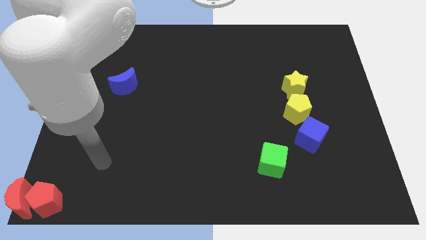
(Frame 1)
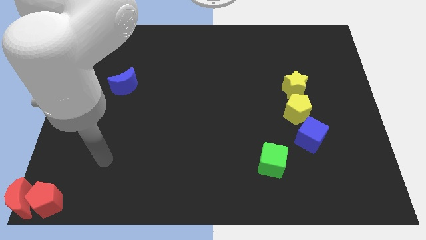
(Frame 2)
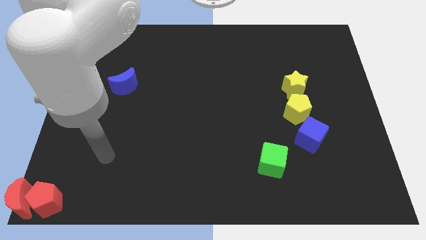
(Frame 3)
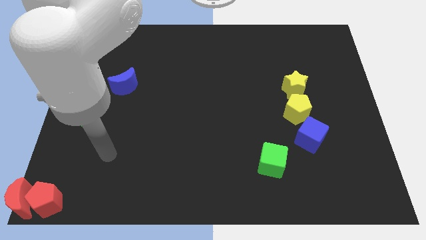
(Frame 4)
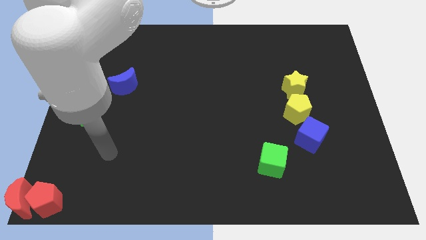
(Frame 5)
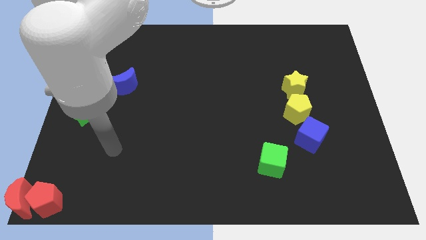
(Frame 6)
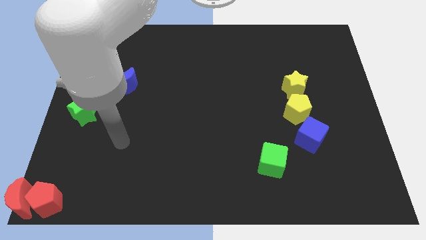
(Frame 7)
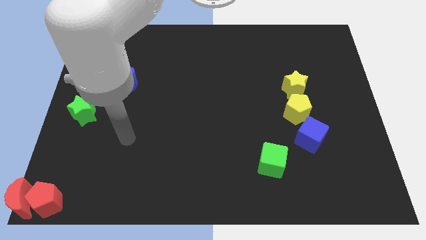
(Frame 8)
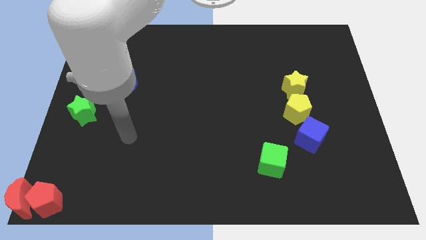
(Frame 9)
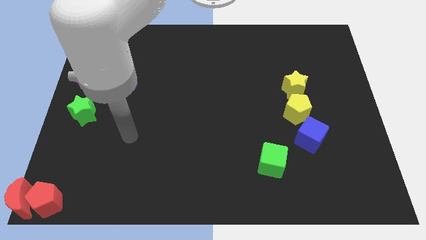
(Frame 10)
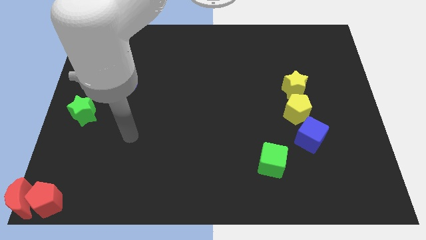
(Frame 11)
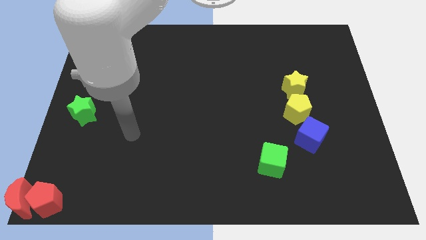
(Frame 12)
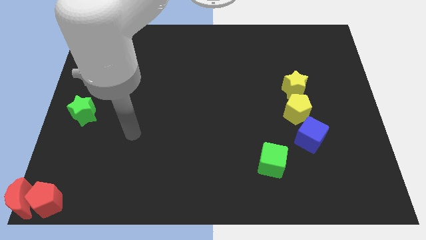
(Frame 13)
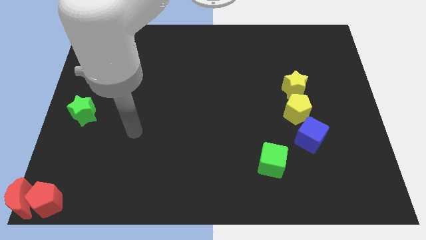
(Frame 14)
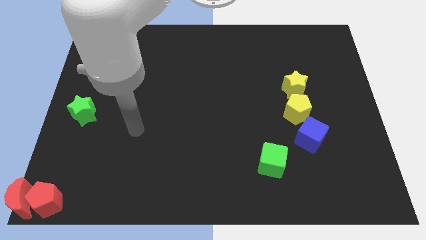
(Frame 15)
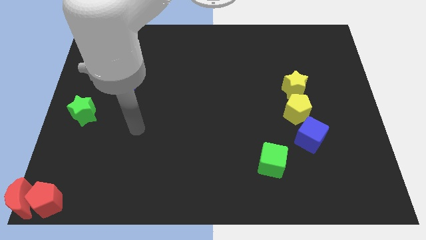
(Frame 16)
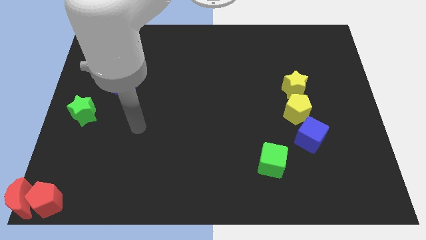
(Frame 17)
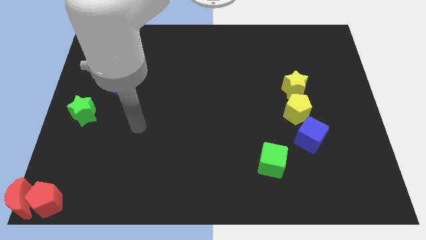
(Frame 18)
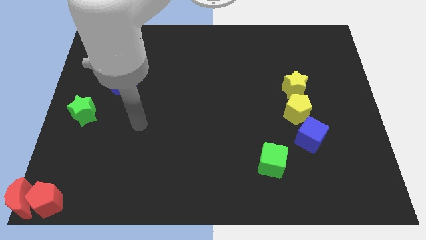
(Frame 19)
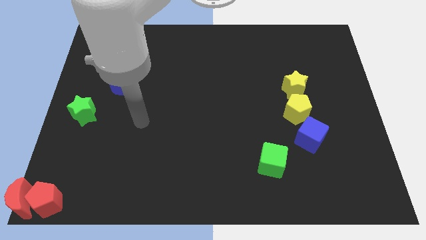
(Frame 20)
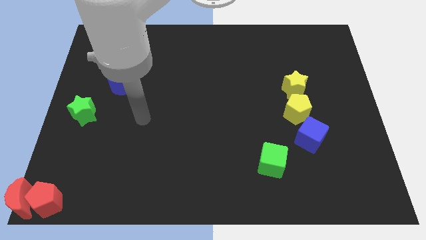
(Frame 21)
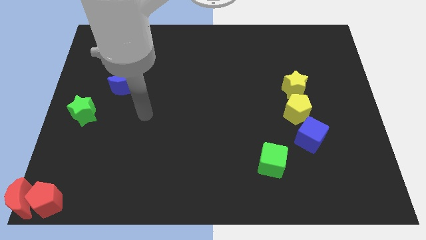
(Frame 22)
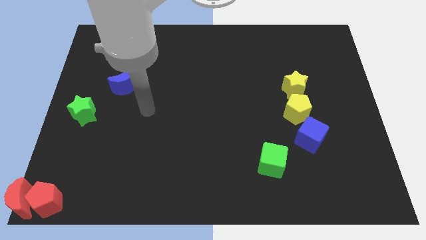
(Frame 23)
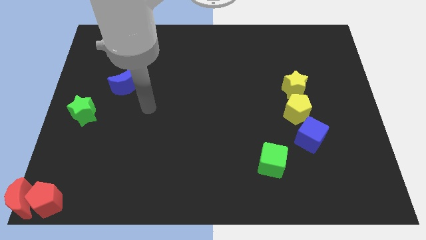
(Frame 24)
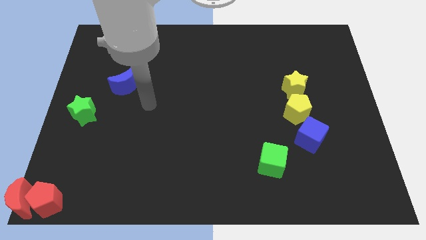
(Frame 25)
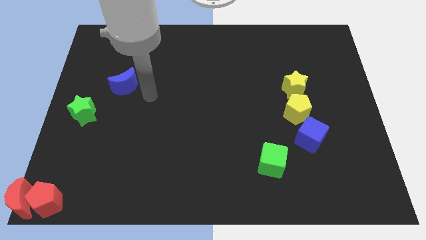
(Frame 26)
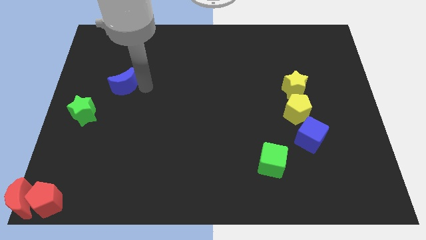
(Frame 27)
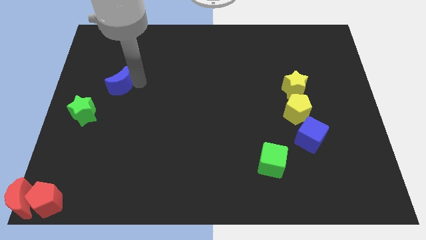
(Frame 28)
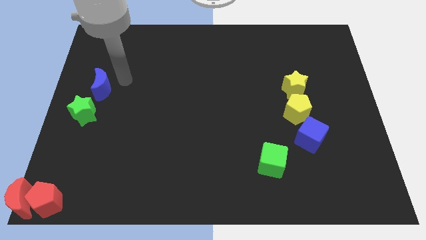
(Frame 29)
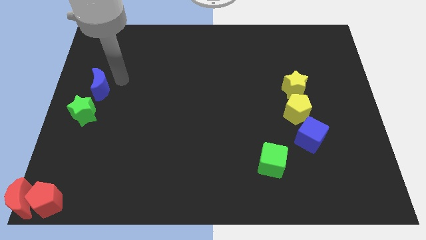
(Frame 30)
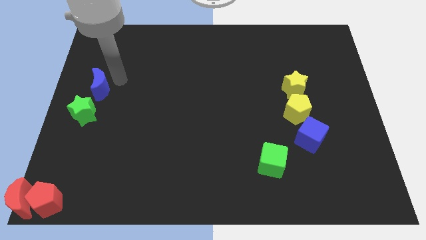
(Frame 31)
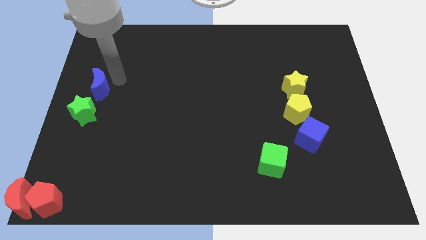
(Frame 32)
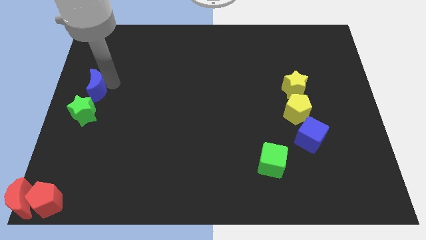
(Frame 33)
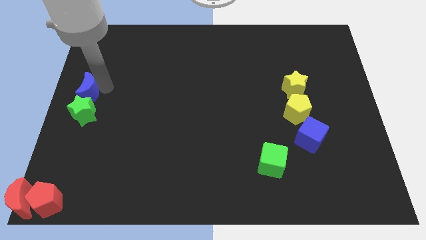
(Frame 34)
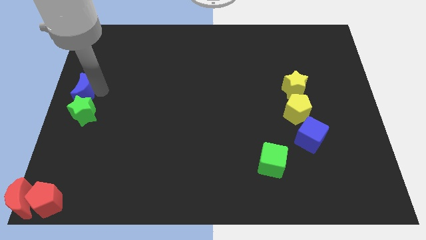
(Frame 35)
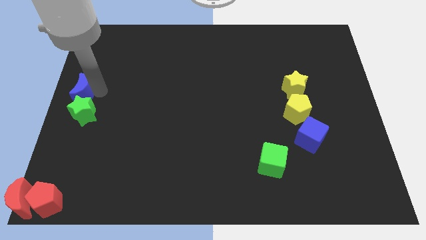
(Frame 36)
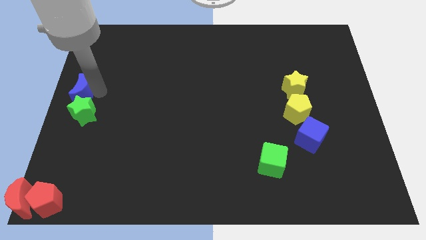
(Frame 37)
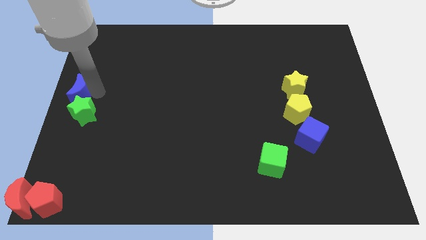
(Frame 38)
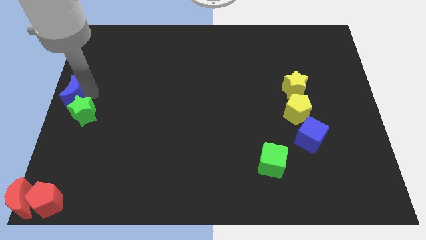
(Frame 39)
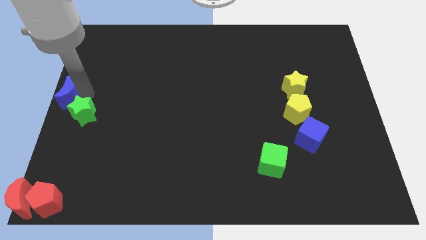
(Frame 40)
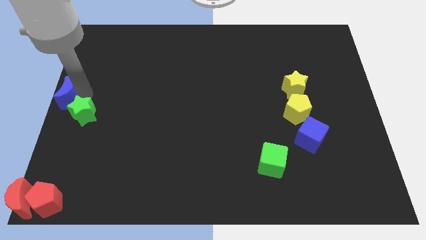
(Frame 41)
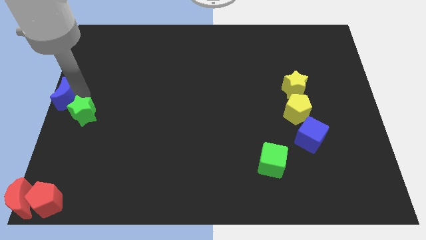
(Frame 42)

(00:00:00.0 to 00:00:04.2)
slide blue moon to the center left

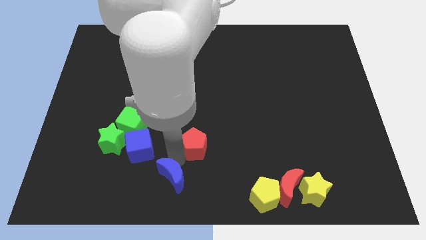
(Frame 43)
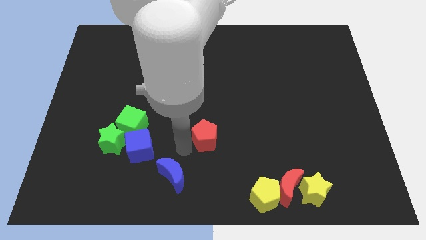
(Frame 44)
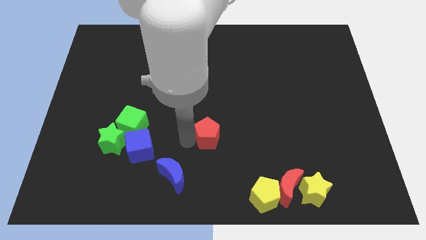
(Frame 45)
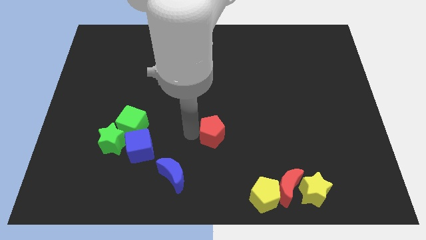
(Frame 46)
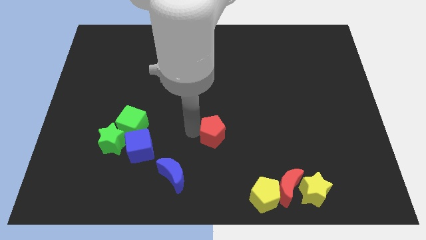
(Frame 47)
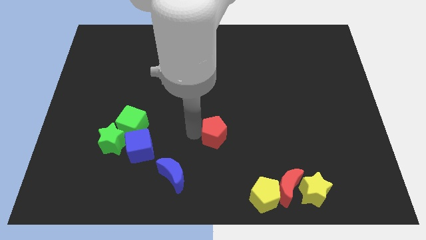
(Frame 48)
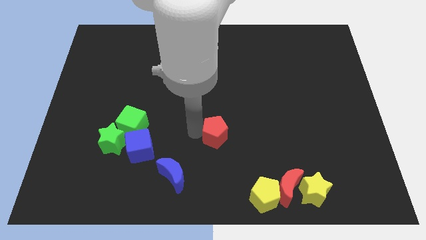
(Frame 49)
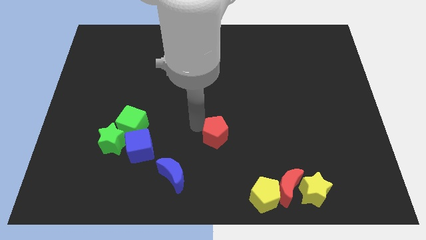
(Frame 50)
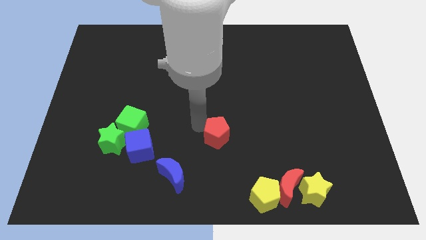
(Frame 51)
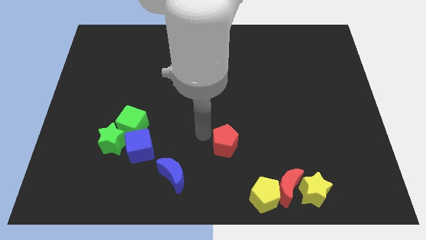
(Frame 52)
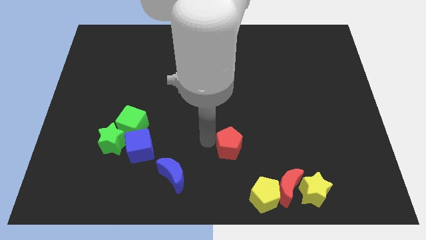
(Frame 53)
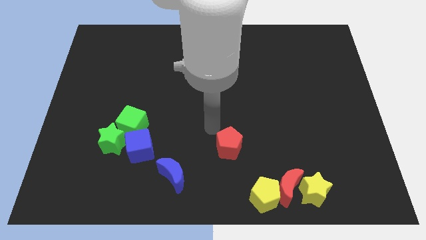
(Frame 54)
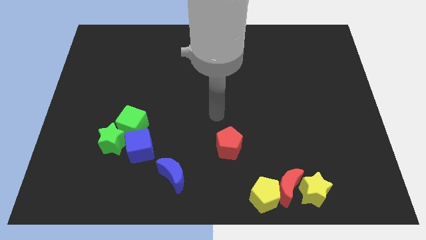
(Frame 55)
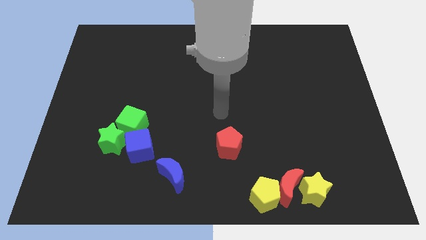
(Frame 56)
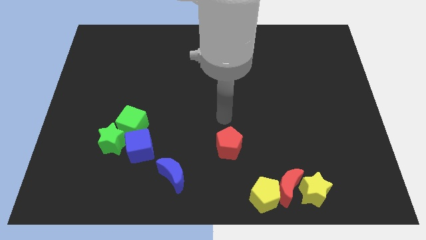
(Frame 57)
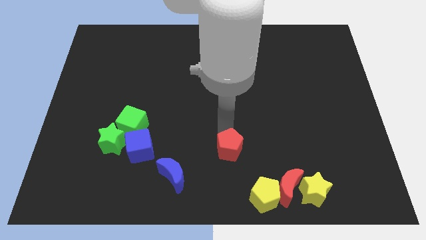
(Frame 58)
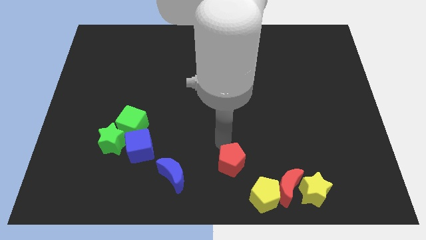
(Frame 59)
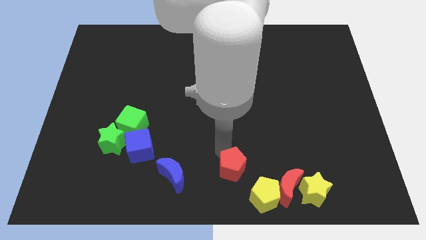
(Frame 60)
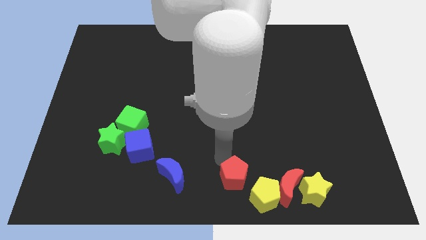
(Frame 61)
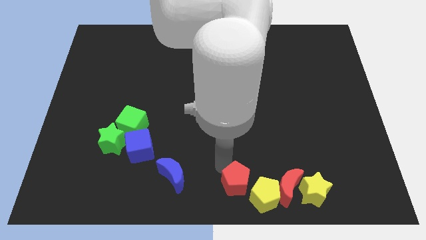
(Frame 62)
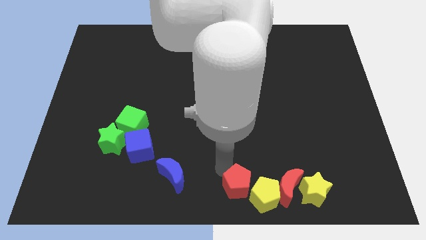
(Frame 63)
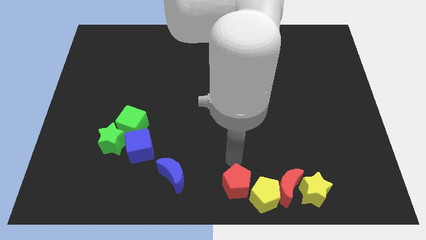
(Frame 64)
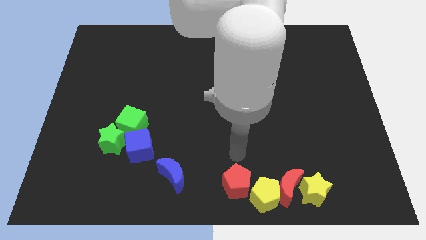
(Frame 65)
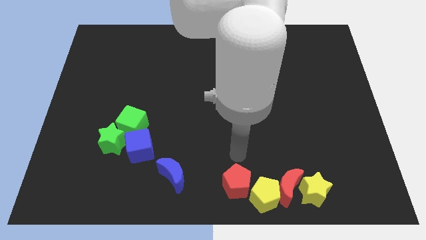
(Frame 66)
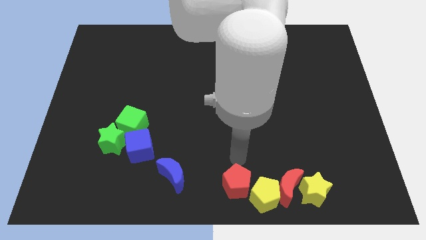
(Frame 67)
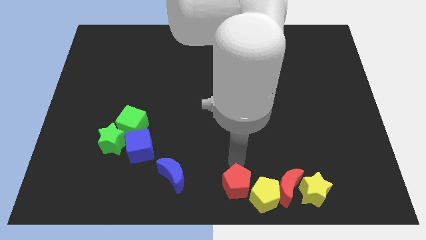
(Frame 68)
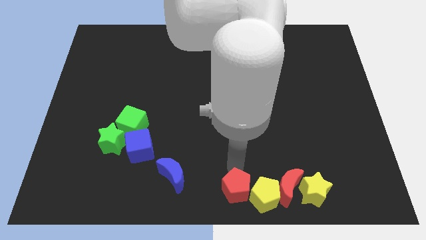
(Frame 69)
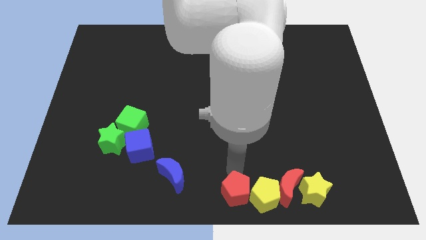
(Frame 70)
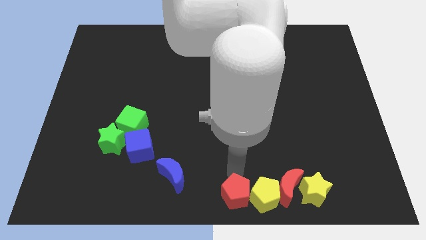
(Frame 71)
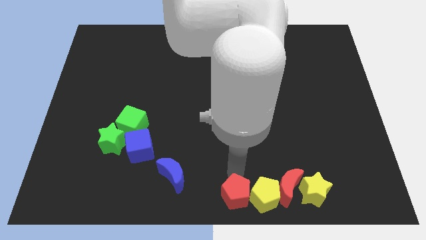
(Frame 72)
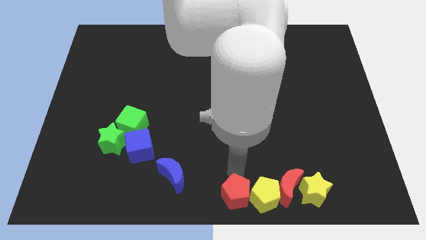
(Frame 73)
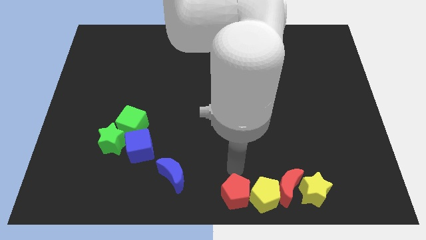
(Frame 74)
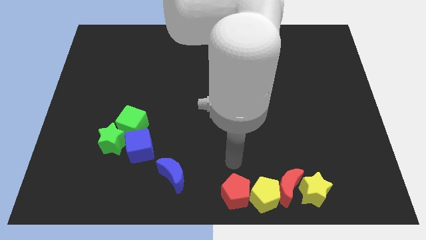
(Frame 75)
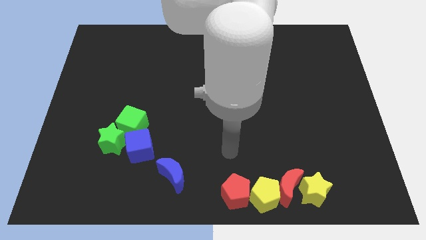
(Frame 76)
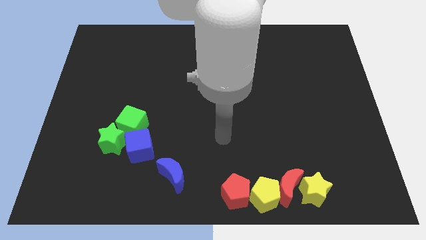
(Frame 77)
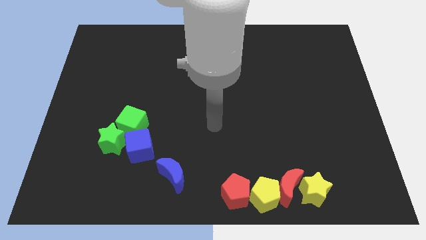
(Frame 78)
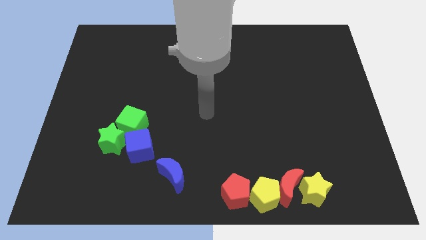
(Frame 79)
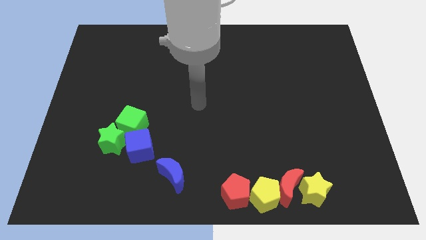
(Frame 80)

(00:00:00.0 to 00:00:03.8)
place red pentagon to the left of yellow pentagon

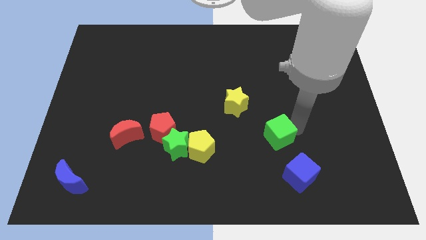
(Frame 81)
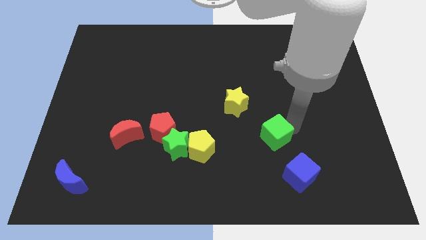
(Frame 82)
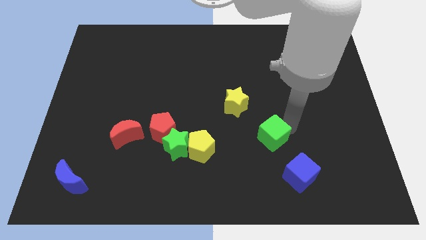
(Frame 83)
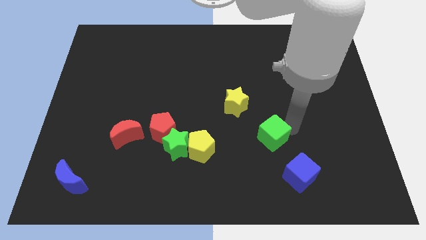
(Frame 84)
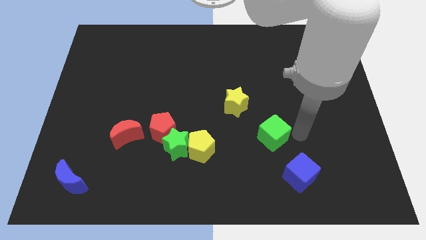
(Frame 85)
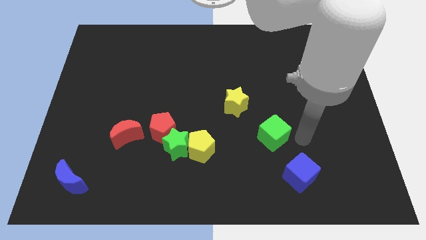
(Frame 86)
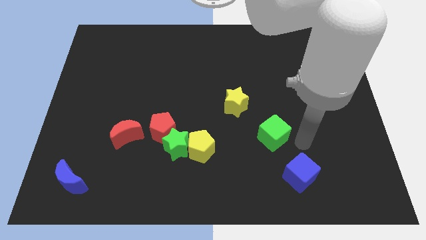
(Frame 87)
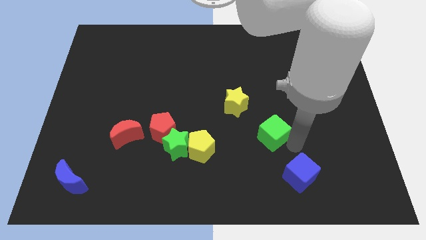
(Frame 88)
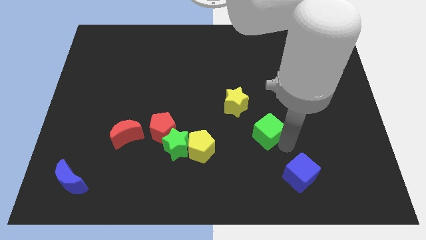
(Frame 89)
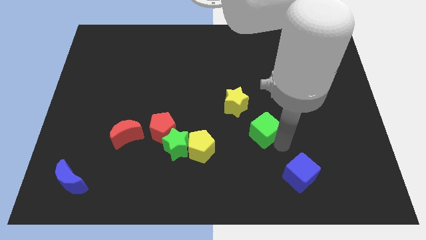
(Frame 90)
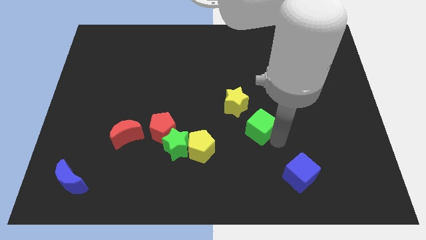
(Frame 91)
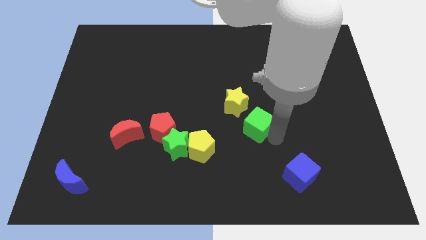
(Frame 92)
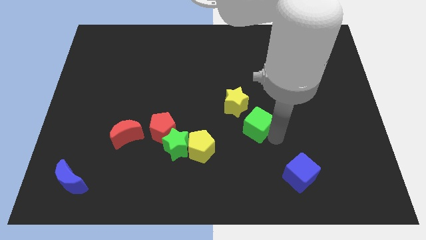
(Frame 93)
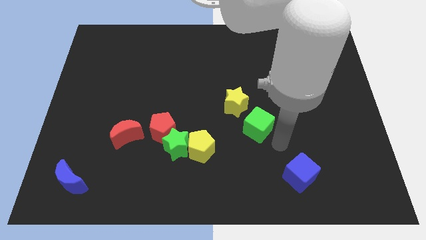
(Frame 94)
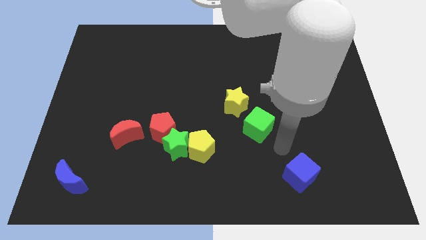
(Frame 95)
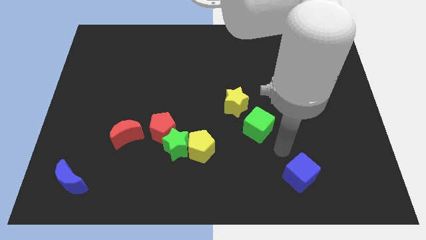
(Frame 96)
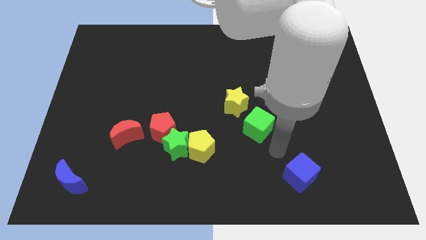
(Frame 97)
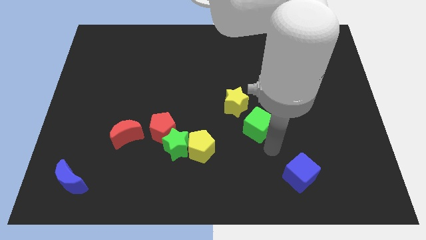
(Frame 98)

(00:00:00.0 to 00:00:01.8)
move the green cube below the yellow star
